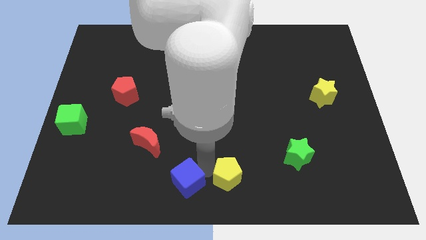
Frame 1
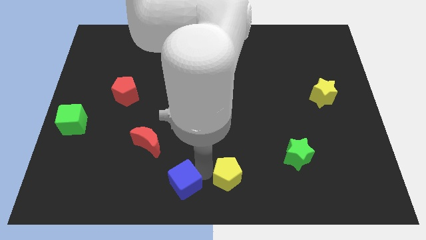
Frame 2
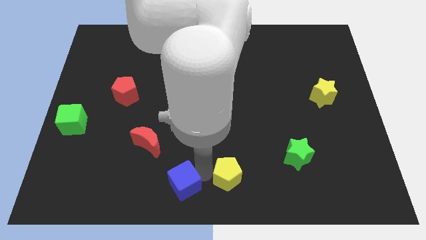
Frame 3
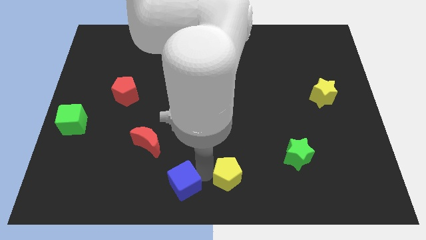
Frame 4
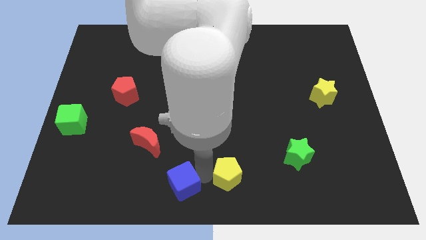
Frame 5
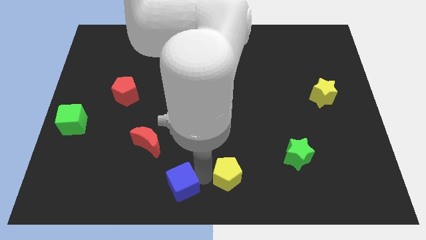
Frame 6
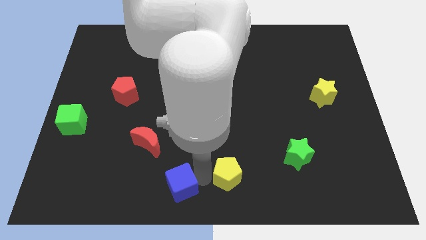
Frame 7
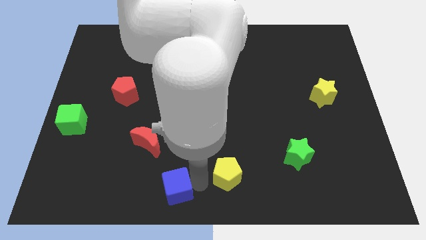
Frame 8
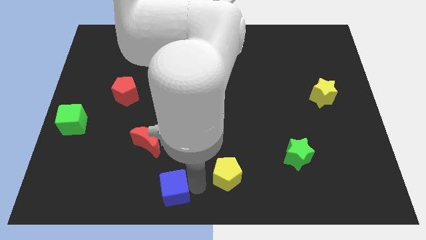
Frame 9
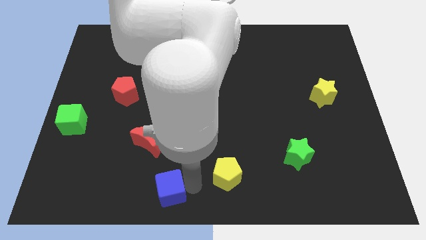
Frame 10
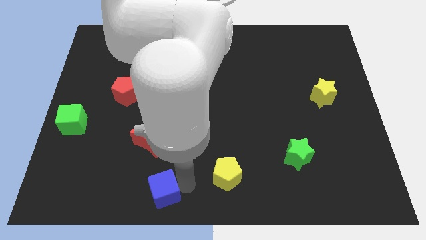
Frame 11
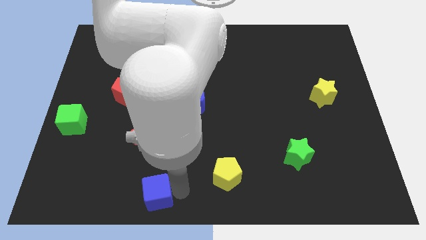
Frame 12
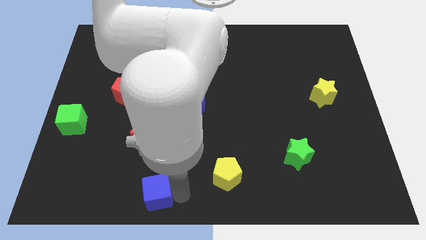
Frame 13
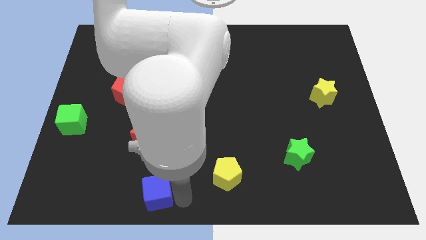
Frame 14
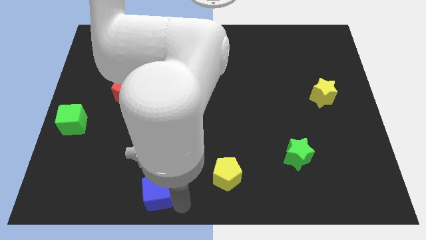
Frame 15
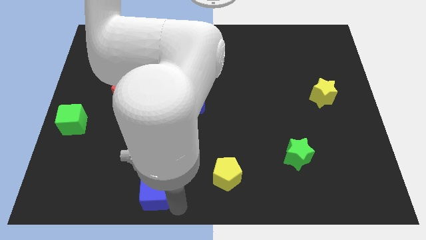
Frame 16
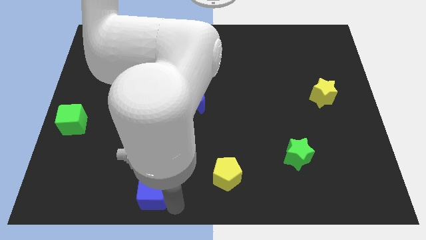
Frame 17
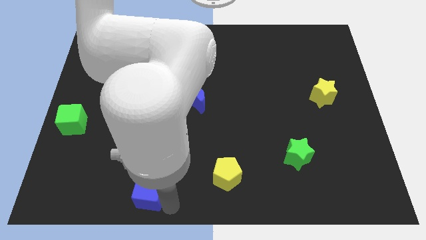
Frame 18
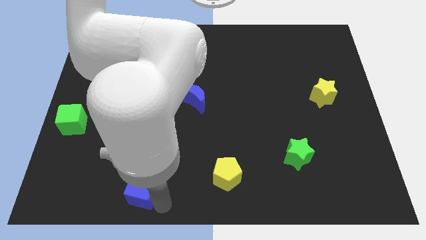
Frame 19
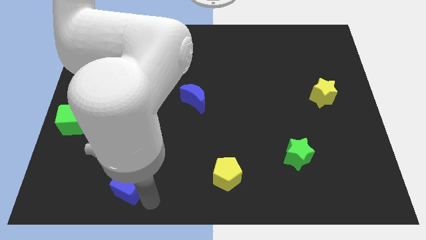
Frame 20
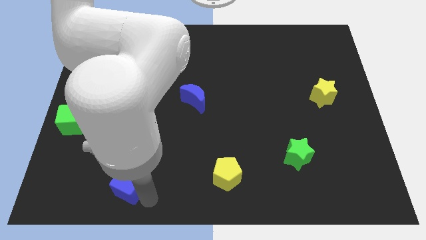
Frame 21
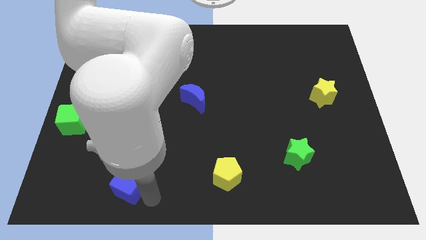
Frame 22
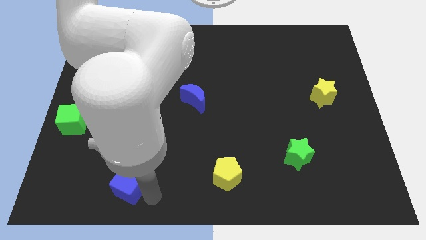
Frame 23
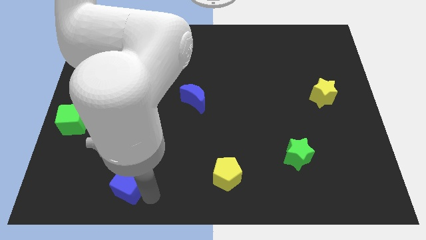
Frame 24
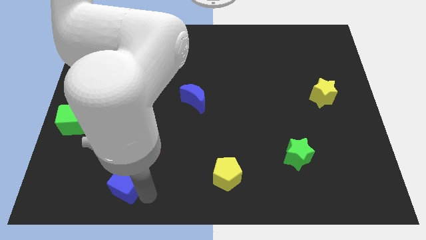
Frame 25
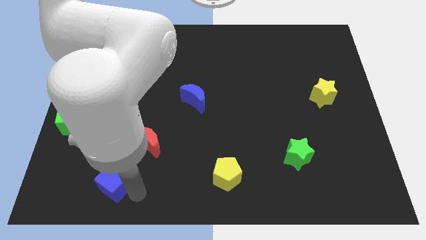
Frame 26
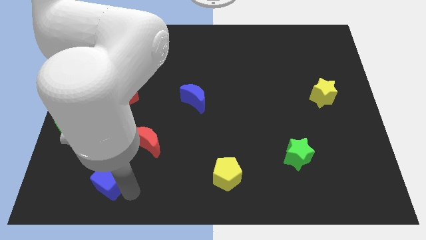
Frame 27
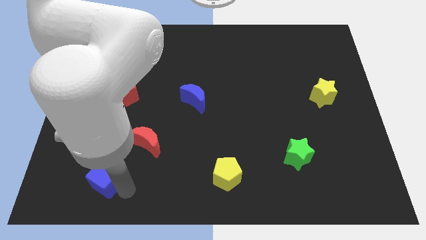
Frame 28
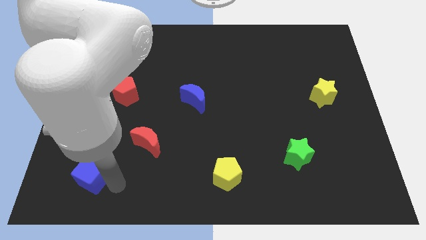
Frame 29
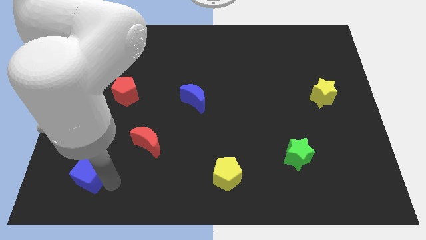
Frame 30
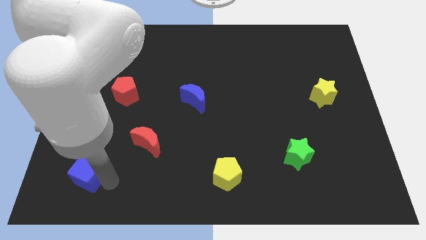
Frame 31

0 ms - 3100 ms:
place blue cube to bottom left of red moon

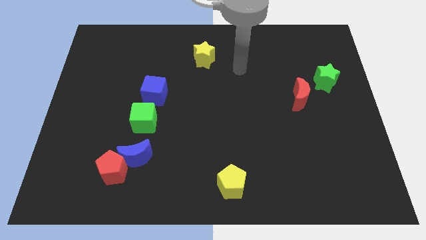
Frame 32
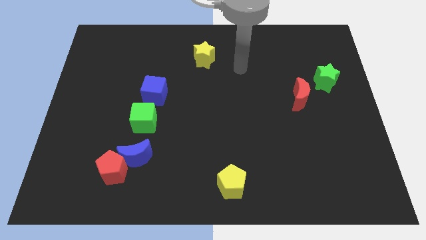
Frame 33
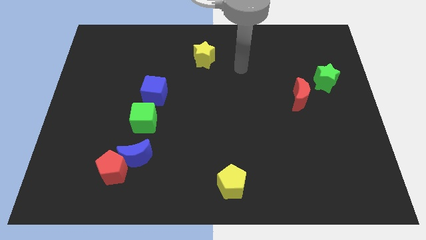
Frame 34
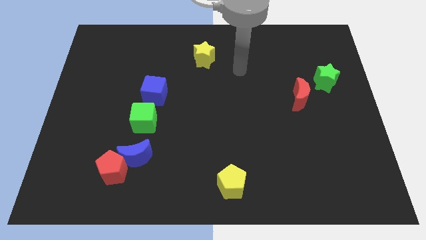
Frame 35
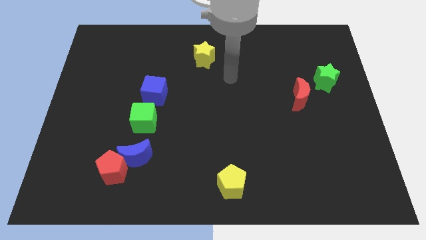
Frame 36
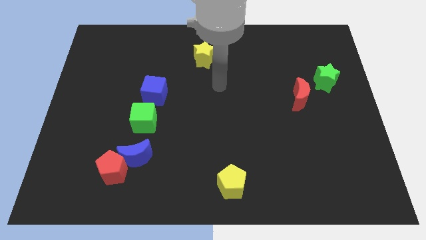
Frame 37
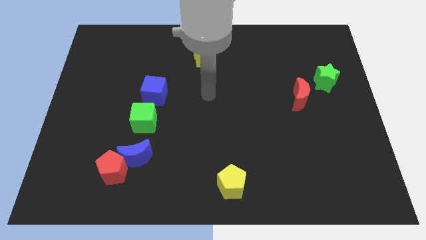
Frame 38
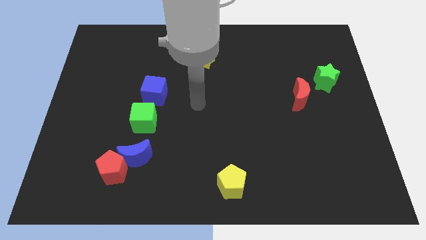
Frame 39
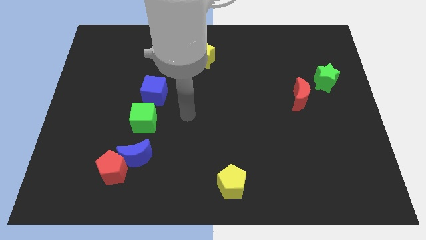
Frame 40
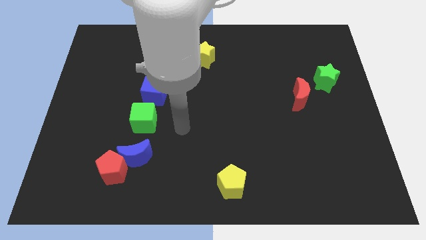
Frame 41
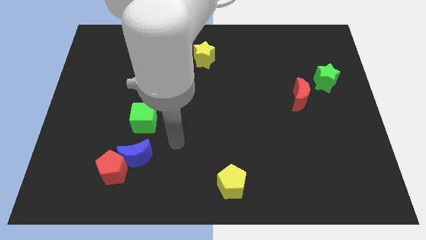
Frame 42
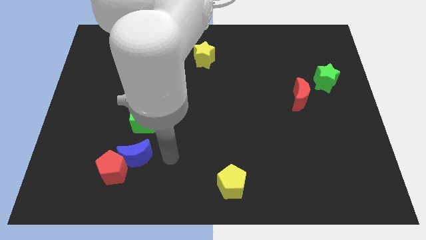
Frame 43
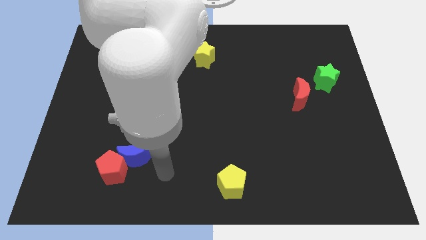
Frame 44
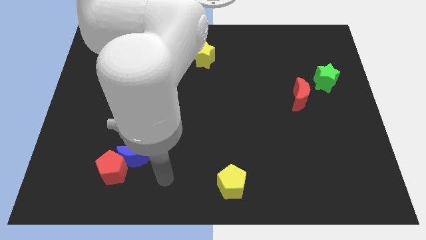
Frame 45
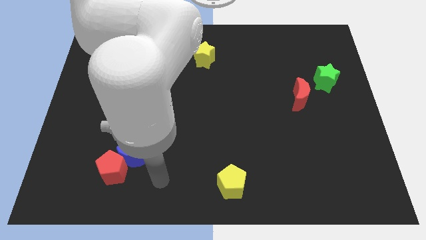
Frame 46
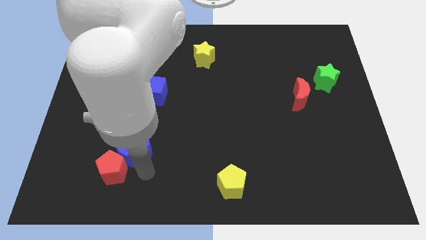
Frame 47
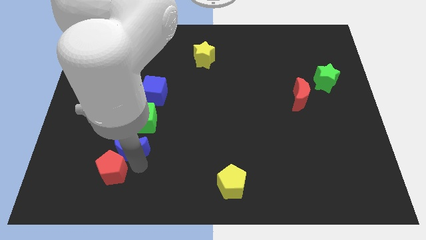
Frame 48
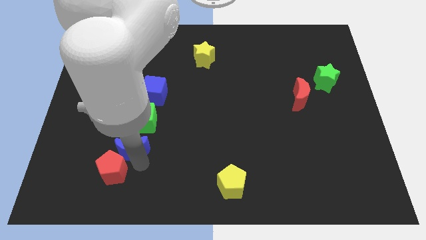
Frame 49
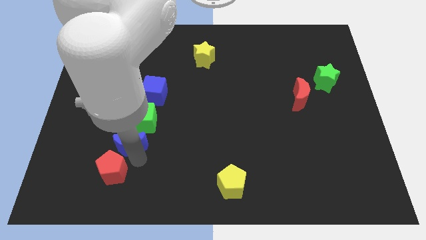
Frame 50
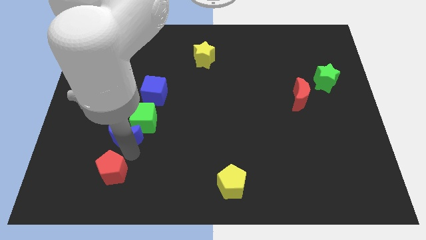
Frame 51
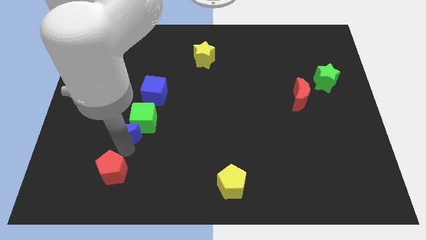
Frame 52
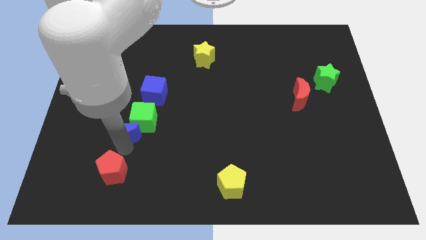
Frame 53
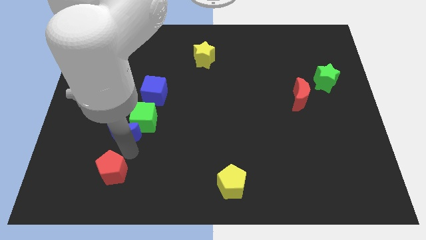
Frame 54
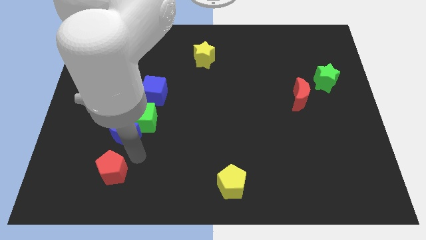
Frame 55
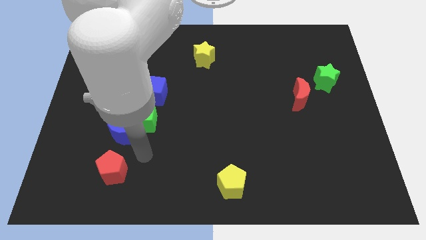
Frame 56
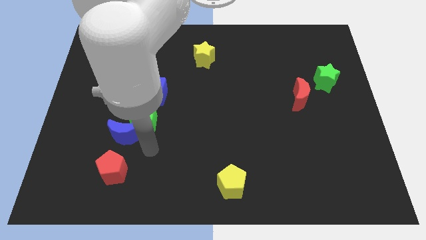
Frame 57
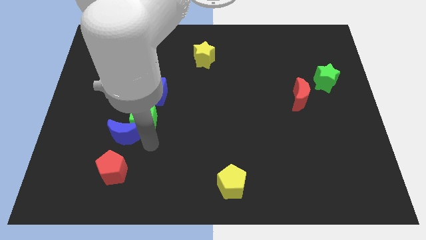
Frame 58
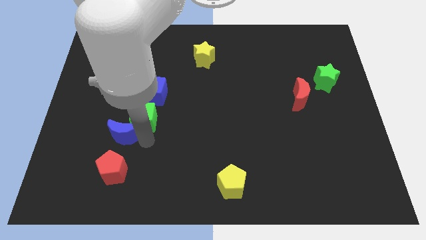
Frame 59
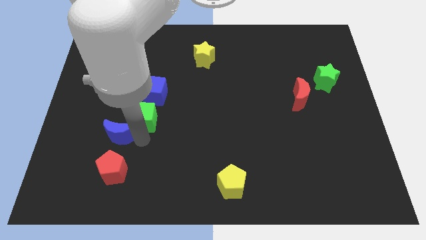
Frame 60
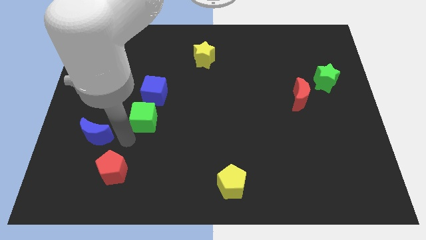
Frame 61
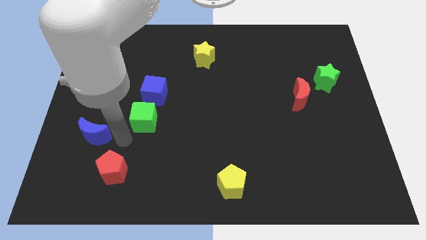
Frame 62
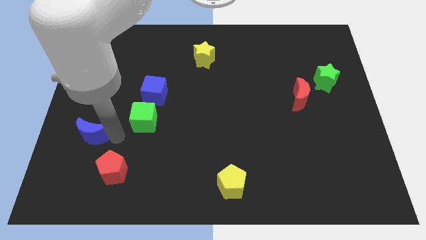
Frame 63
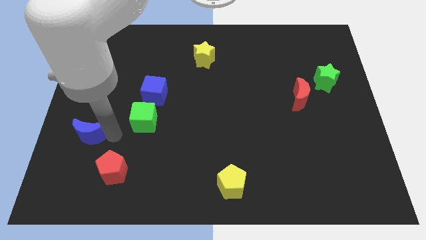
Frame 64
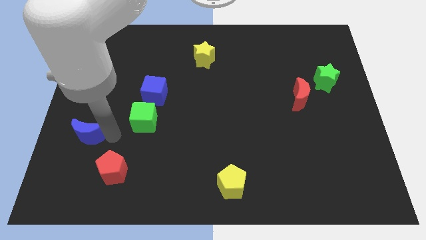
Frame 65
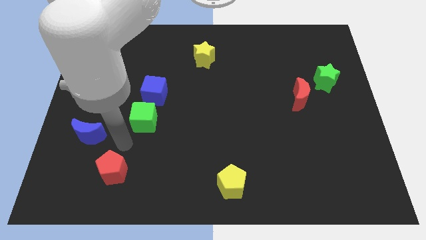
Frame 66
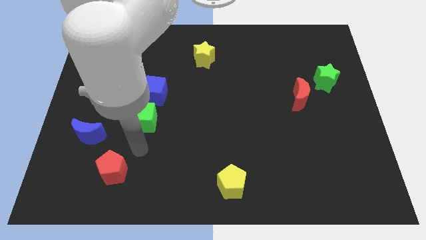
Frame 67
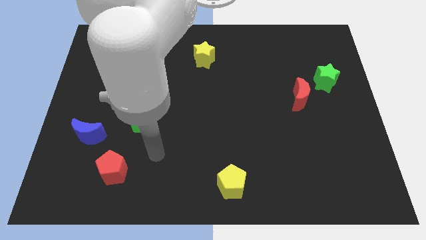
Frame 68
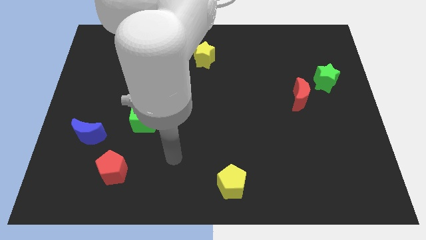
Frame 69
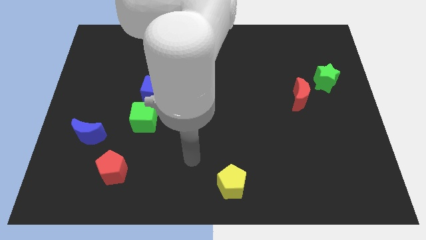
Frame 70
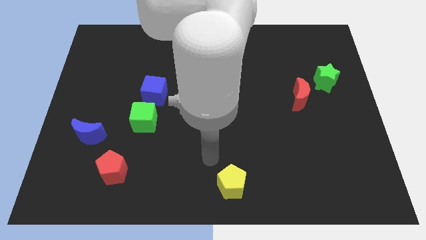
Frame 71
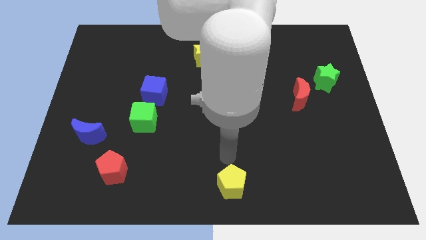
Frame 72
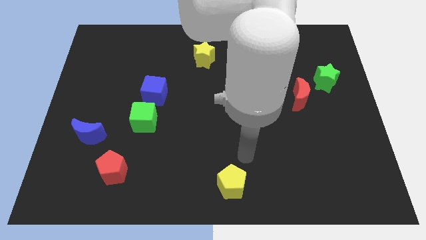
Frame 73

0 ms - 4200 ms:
push the blue crescent to the left side center of the board

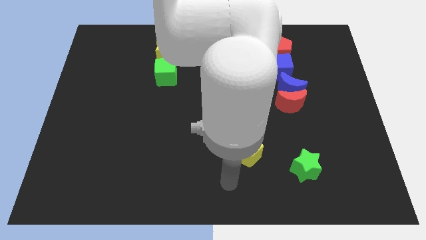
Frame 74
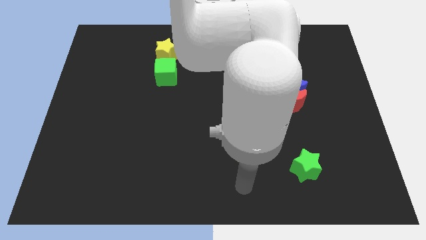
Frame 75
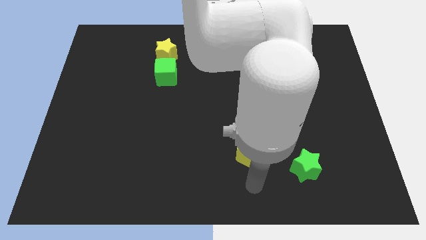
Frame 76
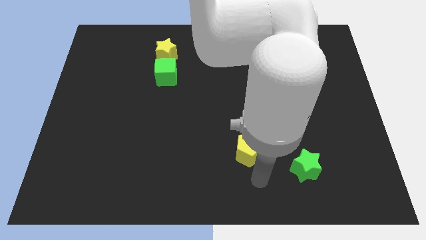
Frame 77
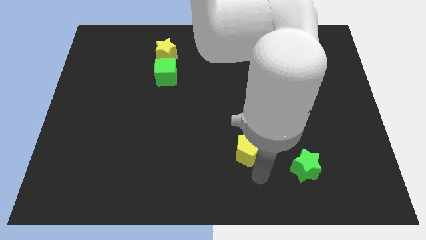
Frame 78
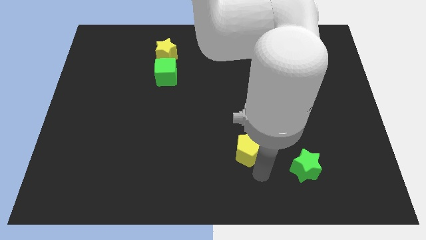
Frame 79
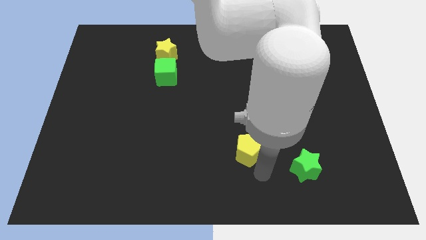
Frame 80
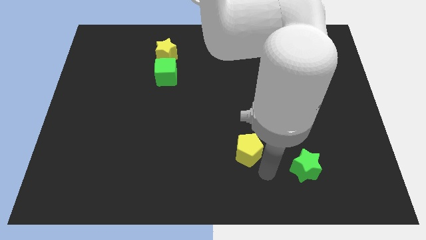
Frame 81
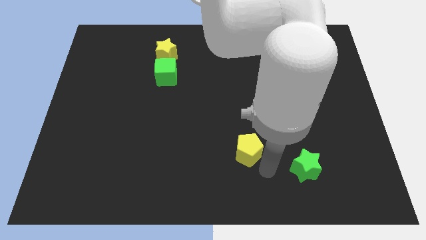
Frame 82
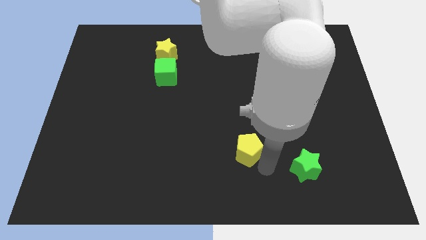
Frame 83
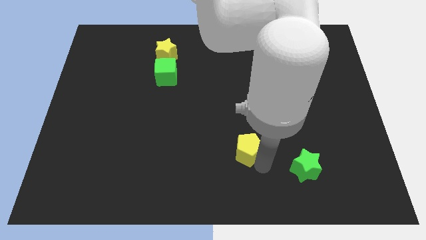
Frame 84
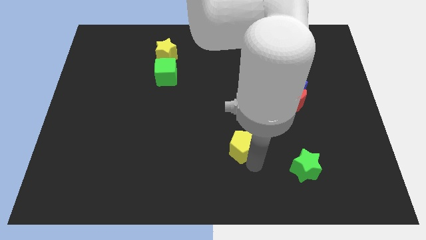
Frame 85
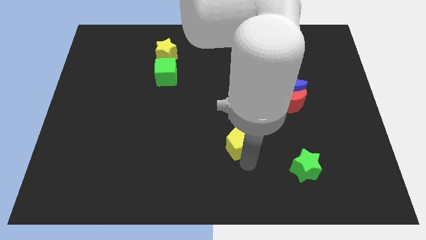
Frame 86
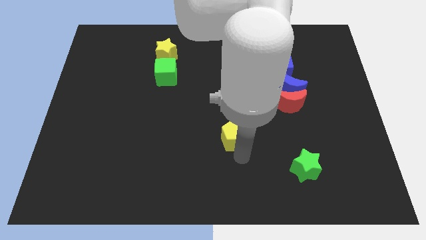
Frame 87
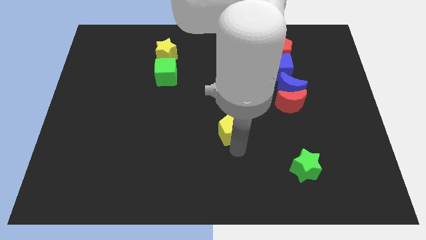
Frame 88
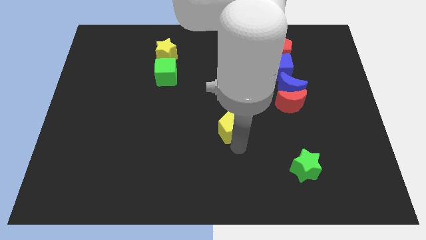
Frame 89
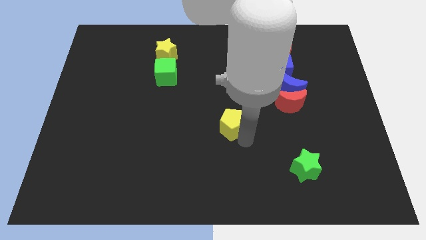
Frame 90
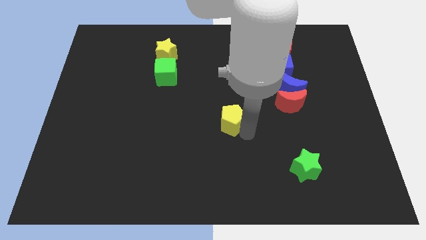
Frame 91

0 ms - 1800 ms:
move the yellow pentagon to the center of the board
